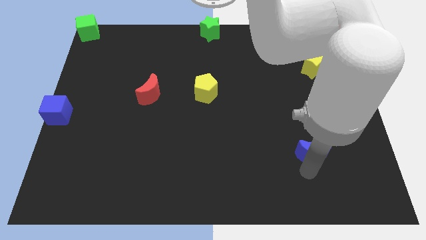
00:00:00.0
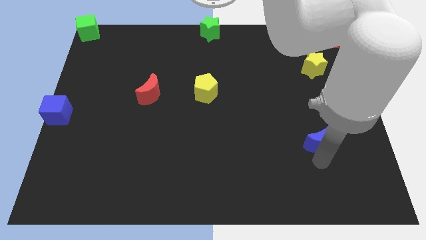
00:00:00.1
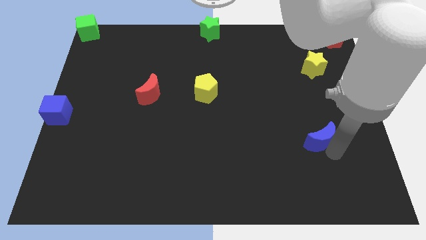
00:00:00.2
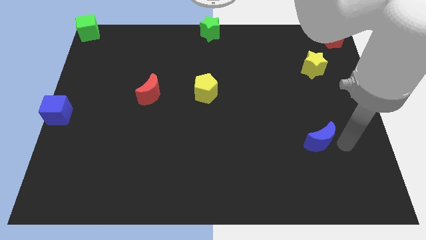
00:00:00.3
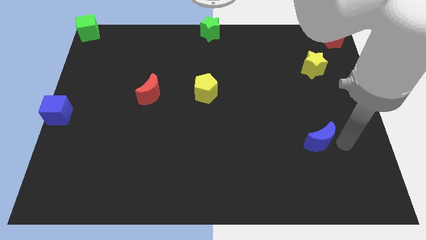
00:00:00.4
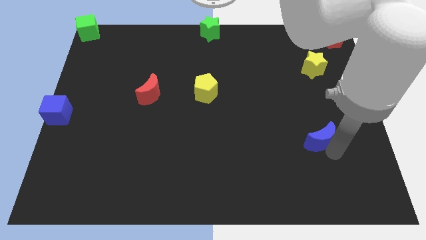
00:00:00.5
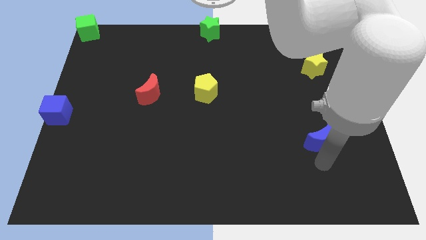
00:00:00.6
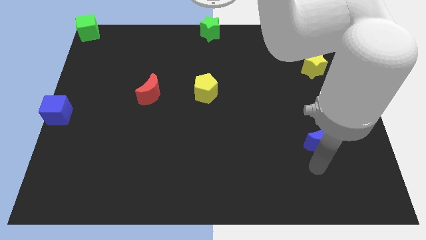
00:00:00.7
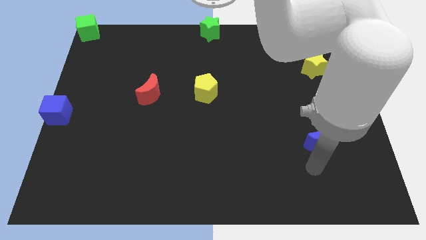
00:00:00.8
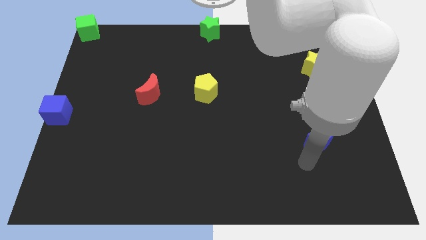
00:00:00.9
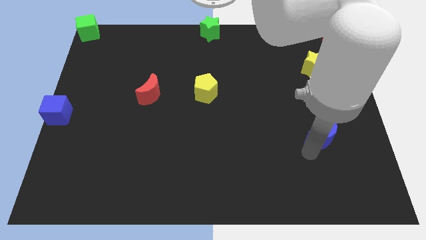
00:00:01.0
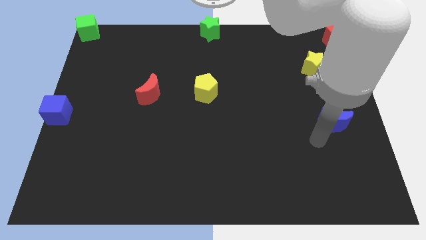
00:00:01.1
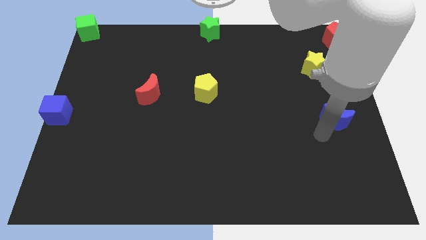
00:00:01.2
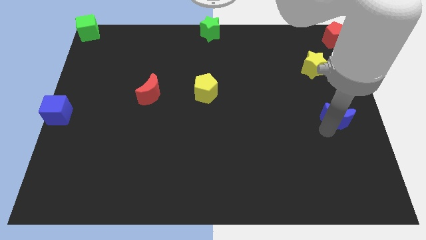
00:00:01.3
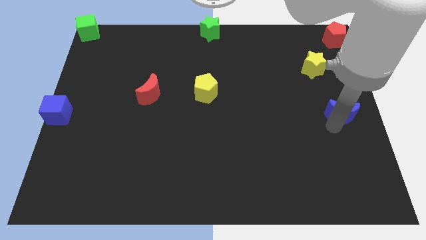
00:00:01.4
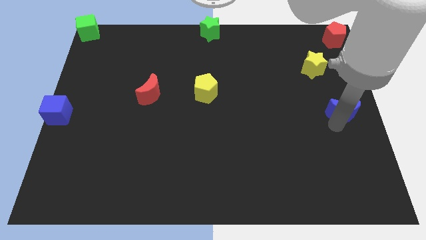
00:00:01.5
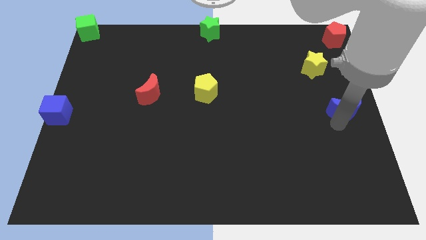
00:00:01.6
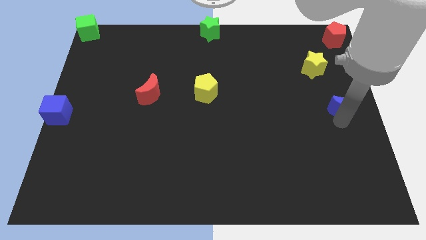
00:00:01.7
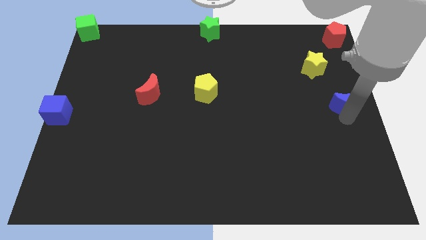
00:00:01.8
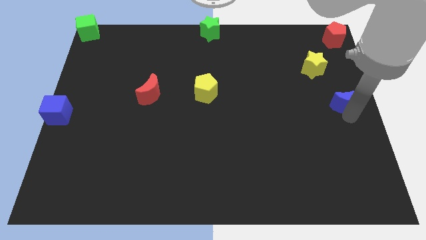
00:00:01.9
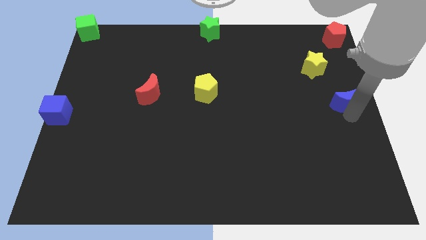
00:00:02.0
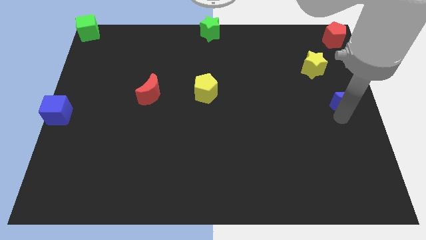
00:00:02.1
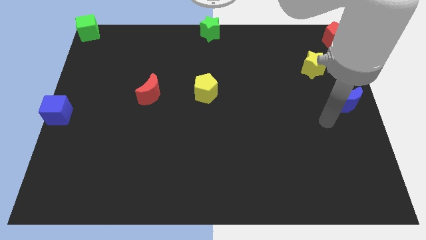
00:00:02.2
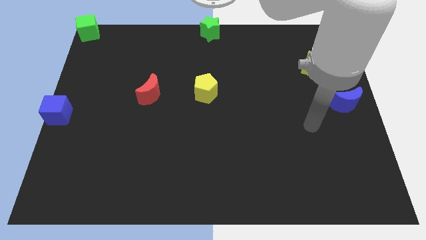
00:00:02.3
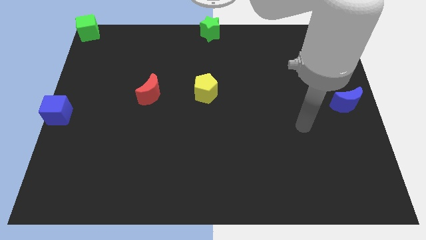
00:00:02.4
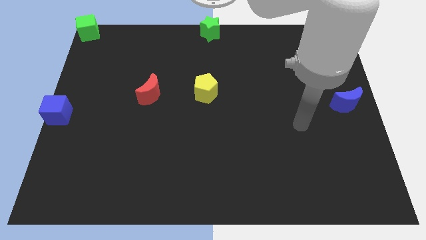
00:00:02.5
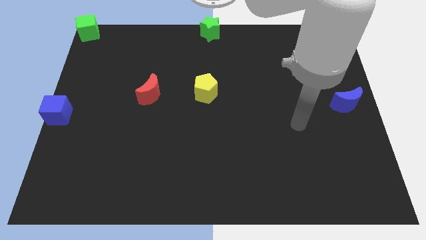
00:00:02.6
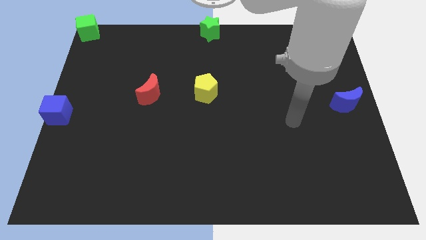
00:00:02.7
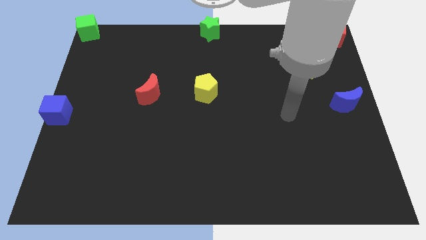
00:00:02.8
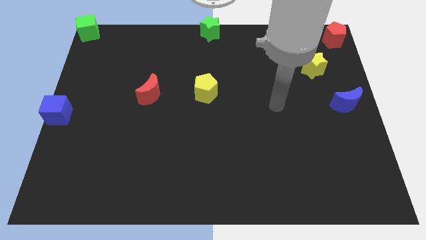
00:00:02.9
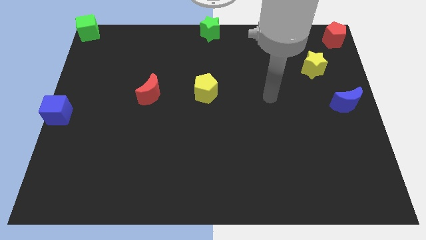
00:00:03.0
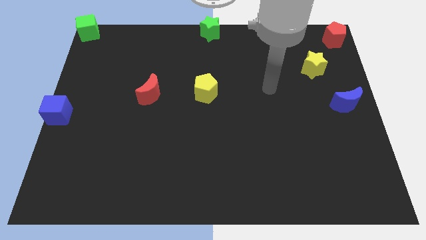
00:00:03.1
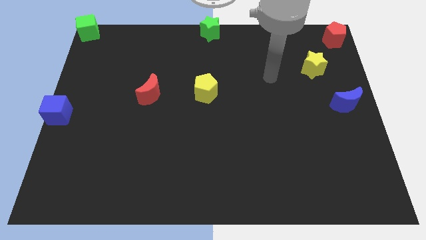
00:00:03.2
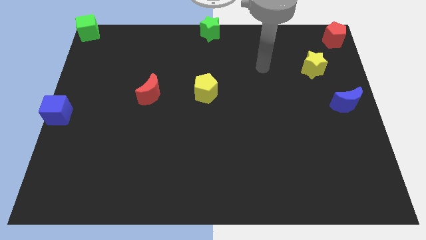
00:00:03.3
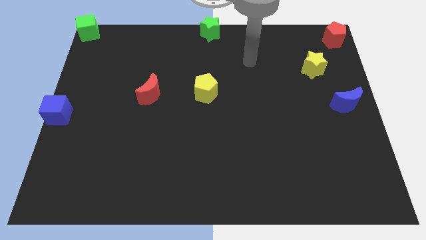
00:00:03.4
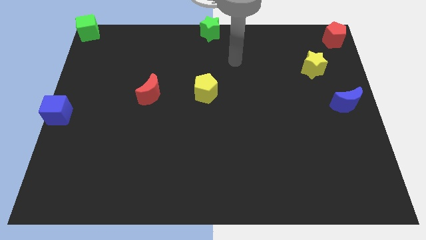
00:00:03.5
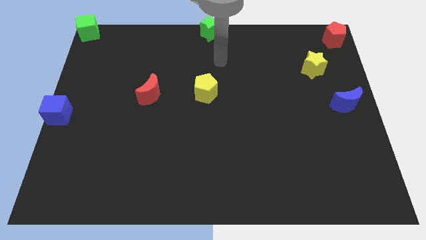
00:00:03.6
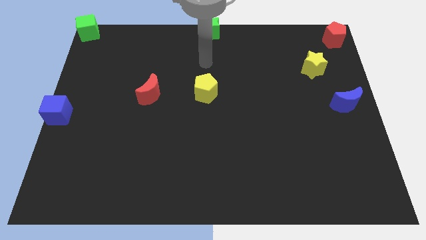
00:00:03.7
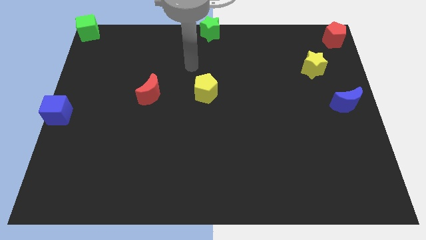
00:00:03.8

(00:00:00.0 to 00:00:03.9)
put the blue crescent to the center right of the board

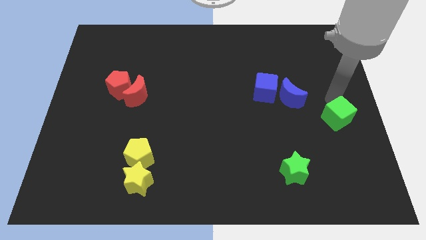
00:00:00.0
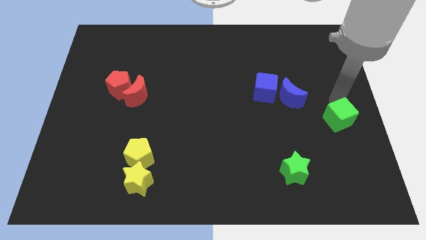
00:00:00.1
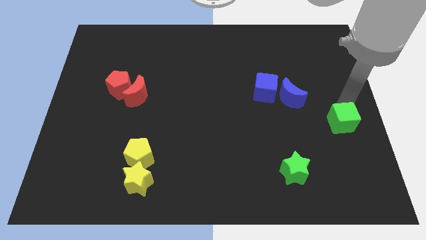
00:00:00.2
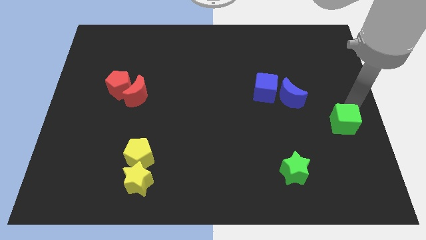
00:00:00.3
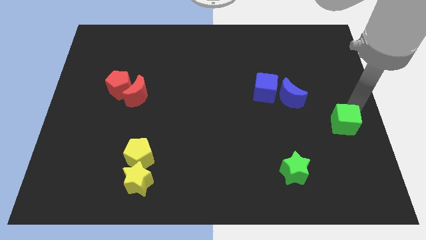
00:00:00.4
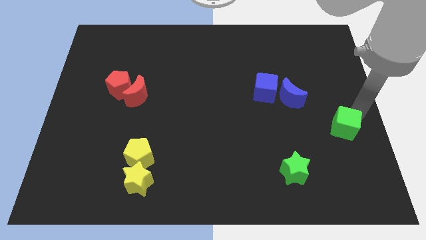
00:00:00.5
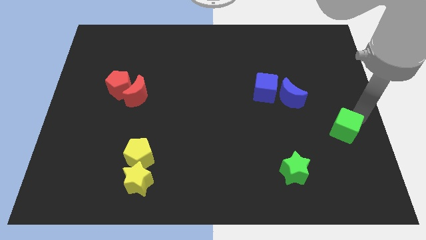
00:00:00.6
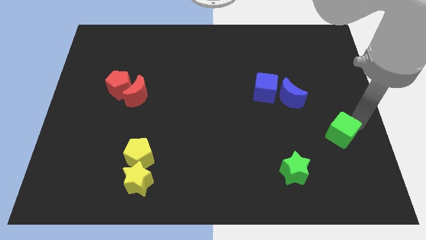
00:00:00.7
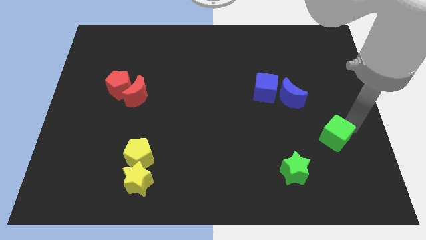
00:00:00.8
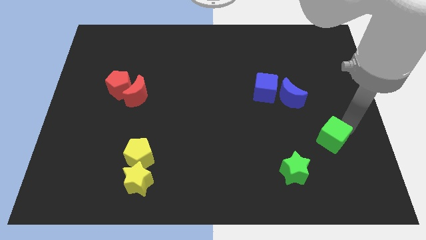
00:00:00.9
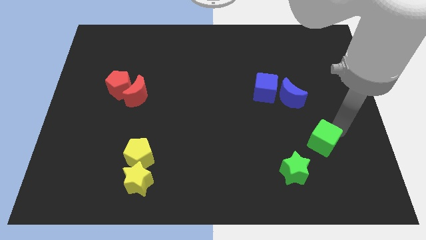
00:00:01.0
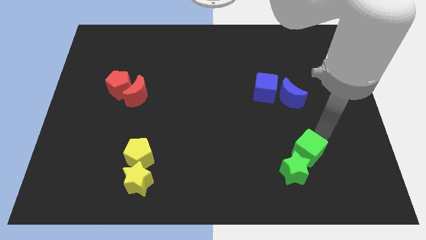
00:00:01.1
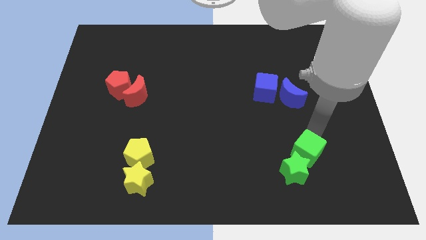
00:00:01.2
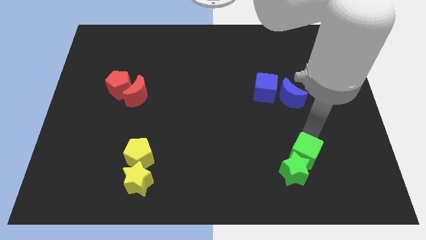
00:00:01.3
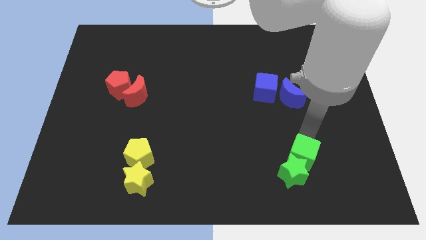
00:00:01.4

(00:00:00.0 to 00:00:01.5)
push green cube towards green star

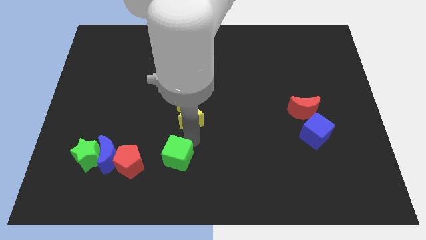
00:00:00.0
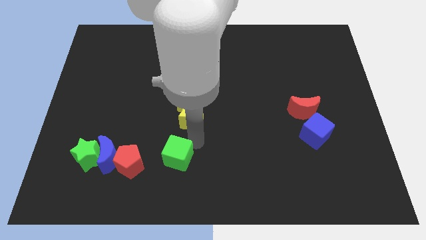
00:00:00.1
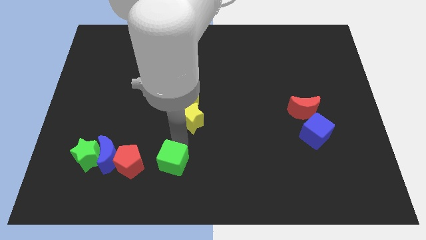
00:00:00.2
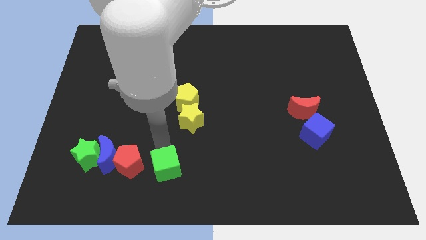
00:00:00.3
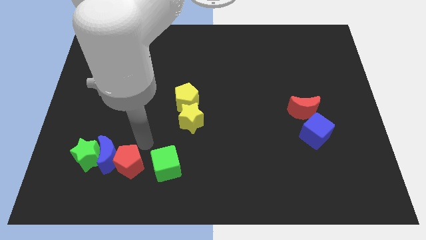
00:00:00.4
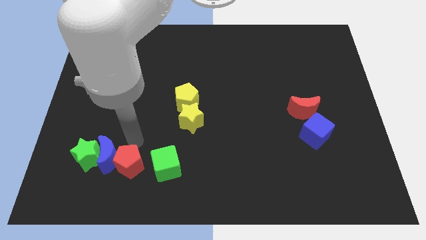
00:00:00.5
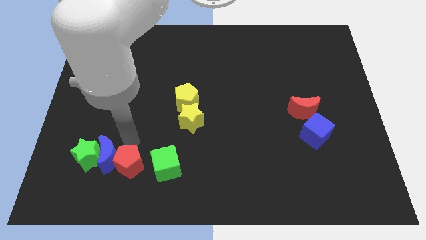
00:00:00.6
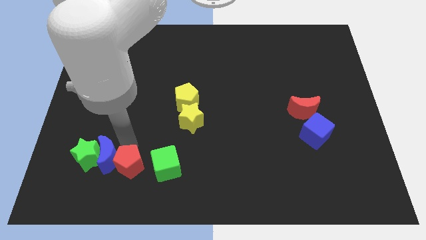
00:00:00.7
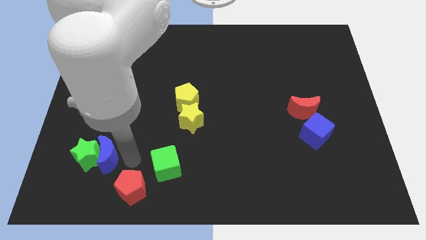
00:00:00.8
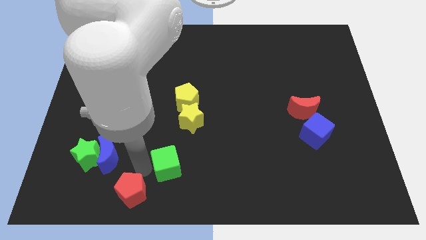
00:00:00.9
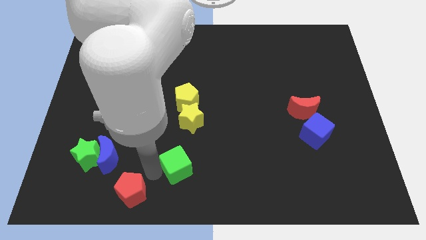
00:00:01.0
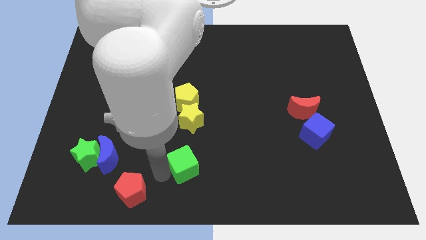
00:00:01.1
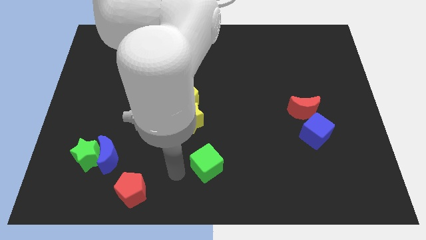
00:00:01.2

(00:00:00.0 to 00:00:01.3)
slightly push the red pentagon down to the board

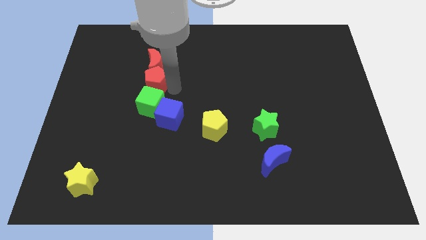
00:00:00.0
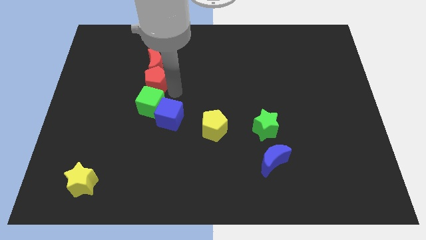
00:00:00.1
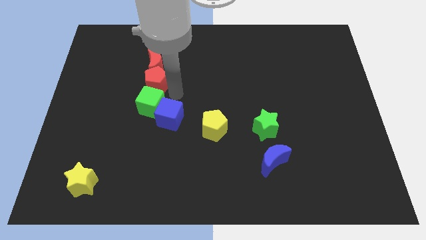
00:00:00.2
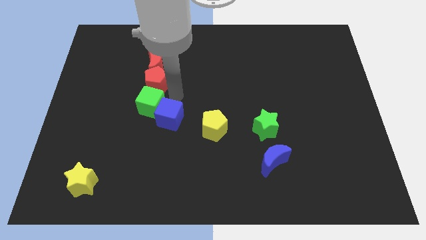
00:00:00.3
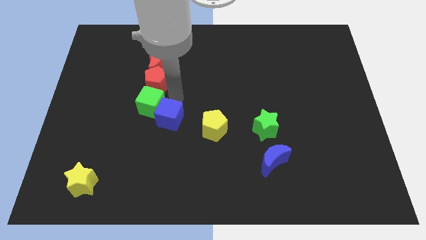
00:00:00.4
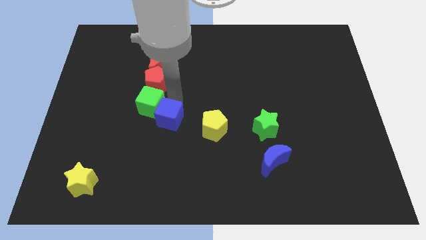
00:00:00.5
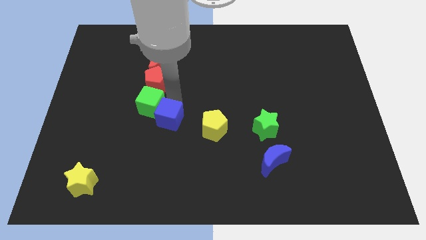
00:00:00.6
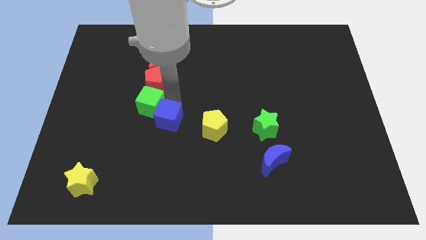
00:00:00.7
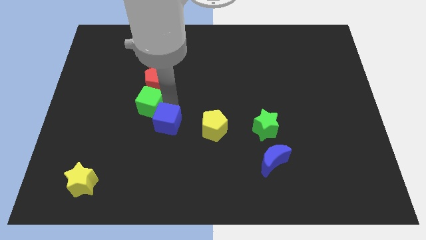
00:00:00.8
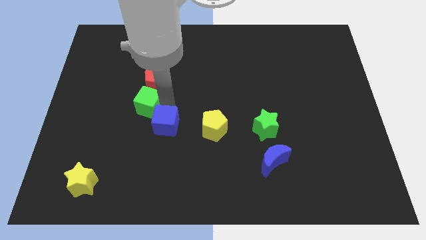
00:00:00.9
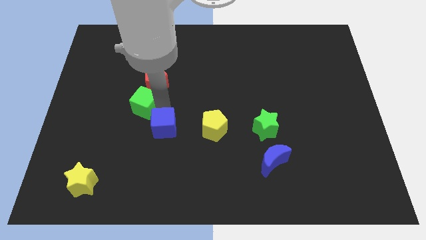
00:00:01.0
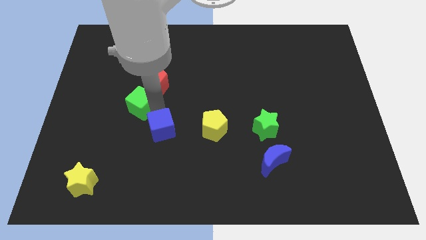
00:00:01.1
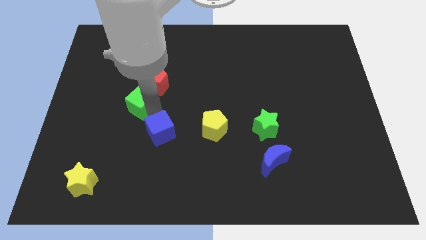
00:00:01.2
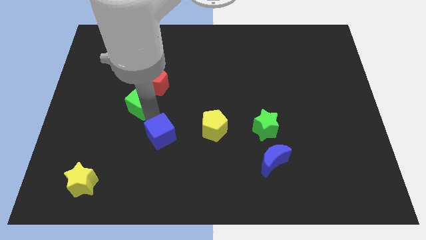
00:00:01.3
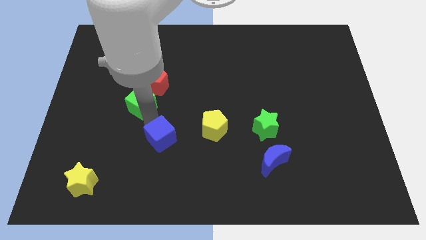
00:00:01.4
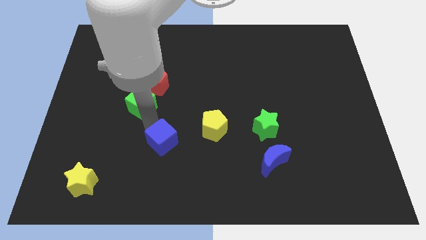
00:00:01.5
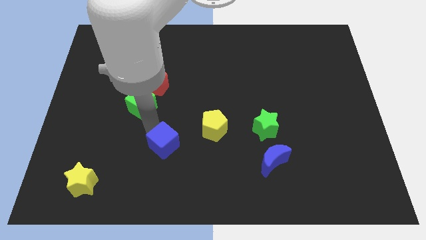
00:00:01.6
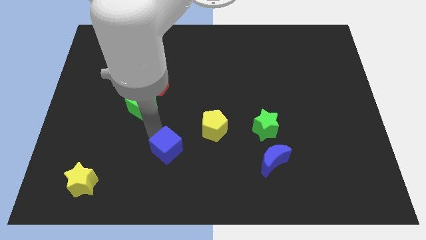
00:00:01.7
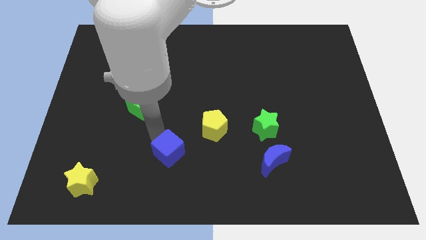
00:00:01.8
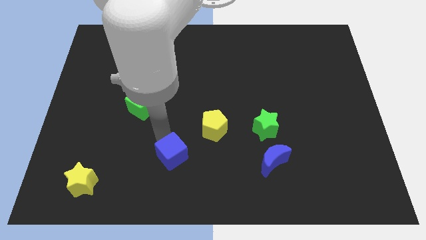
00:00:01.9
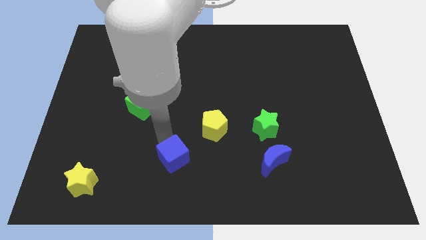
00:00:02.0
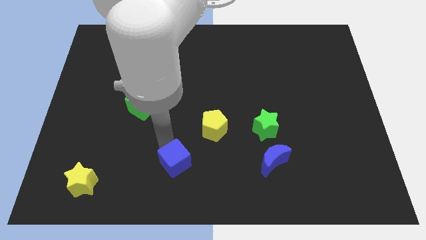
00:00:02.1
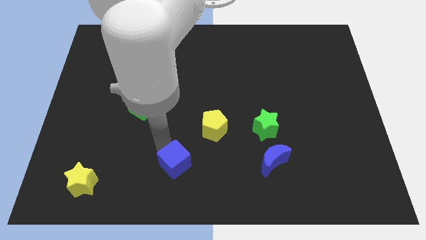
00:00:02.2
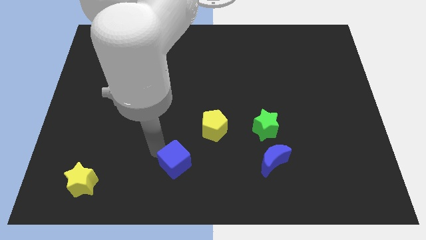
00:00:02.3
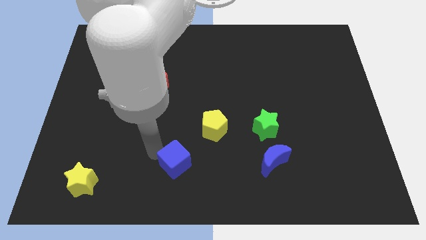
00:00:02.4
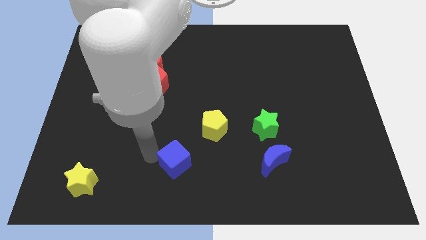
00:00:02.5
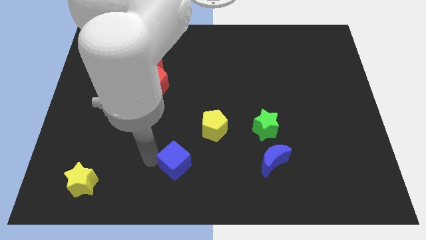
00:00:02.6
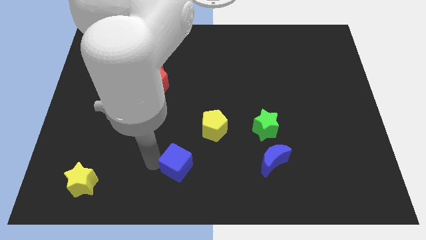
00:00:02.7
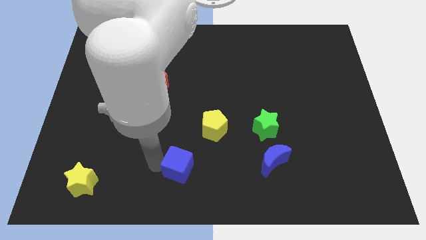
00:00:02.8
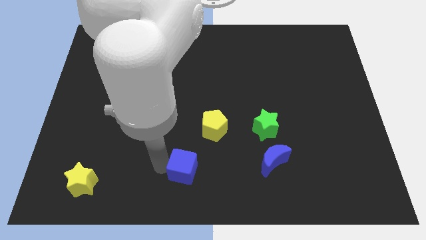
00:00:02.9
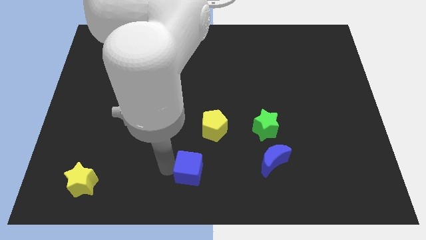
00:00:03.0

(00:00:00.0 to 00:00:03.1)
separate blue cube from green cube
